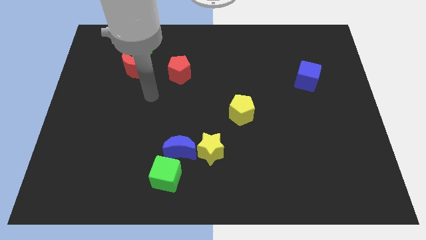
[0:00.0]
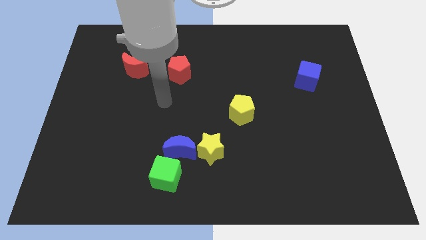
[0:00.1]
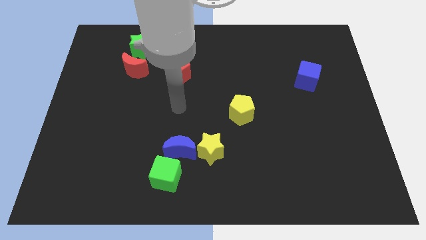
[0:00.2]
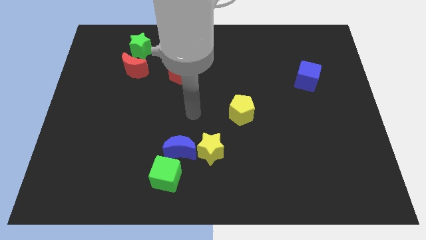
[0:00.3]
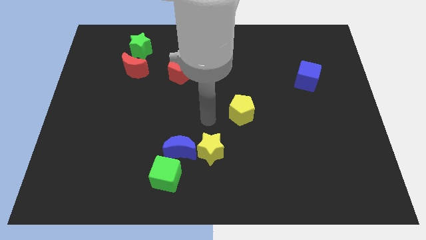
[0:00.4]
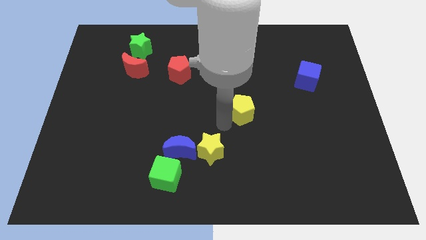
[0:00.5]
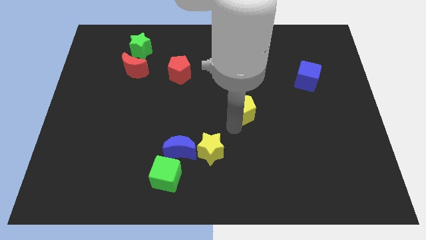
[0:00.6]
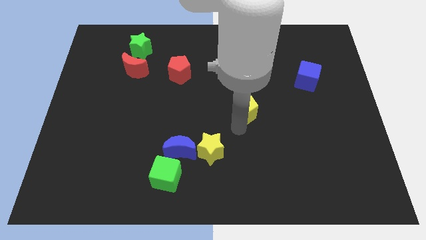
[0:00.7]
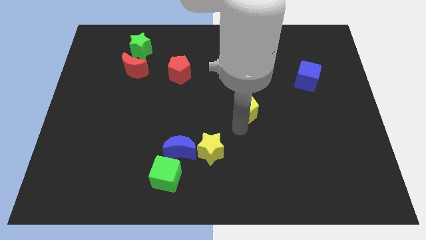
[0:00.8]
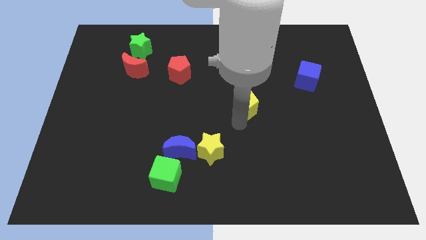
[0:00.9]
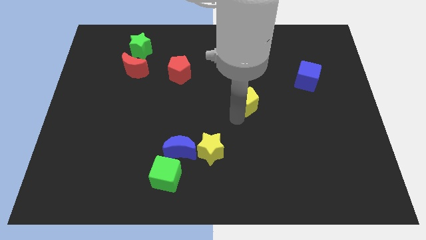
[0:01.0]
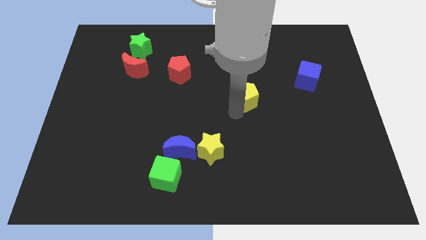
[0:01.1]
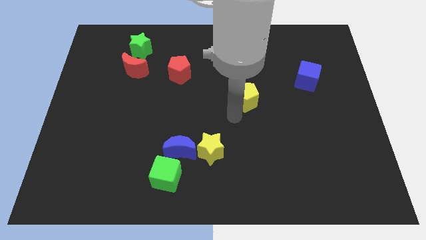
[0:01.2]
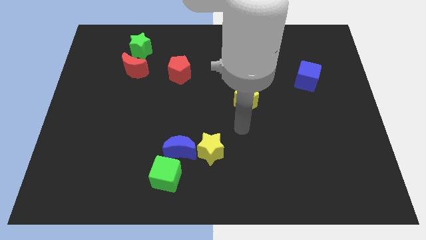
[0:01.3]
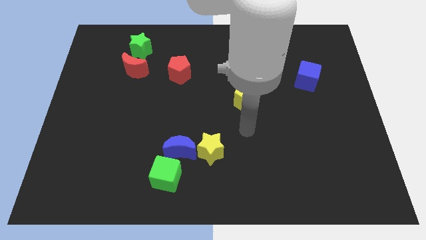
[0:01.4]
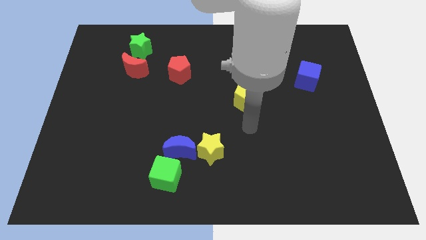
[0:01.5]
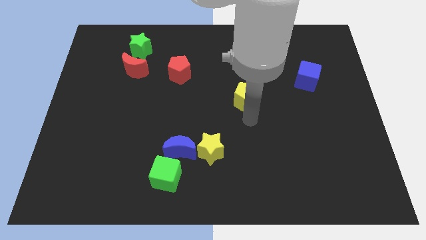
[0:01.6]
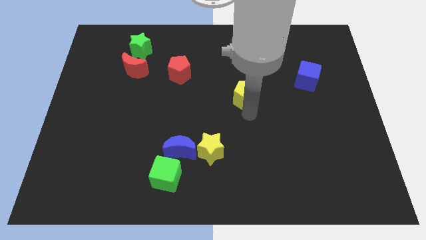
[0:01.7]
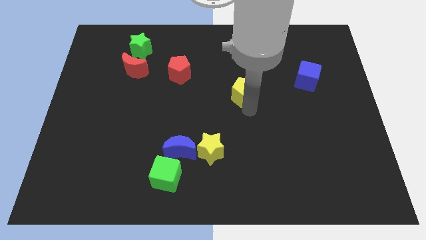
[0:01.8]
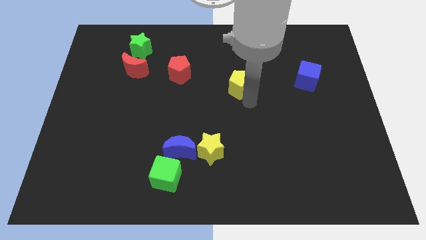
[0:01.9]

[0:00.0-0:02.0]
move the yellow pentagon to the bottom right of red pentagon

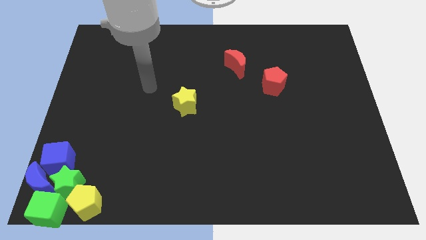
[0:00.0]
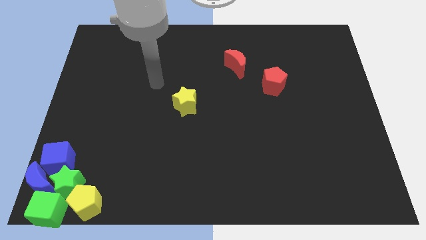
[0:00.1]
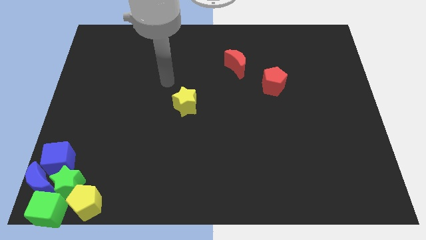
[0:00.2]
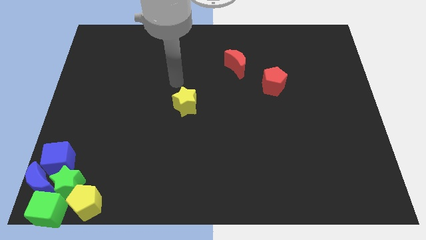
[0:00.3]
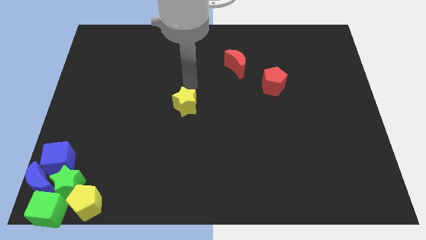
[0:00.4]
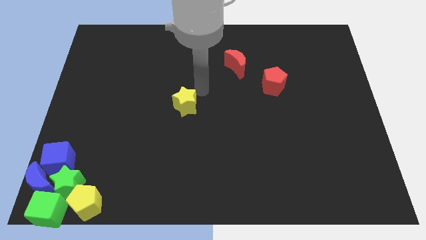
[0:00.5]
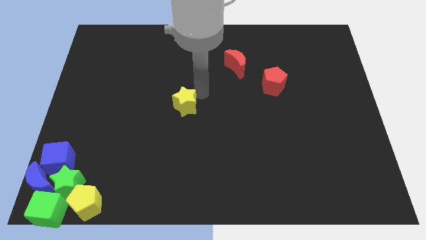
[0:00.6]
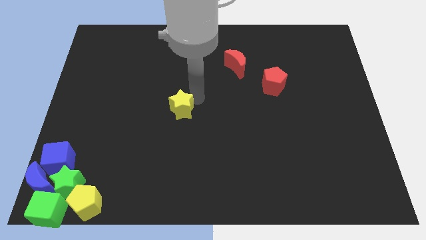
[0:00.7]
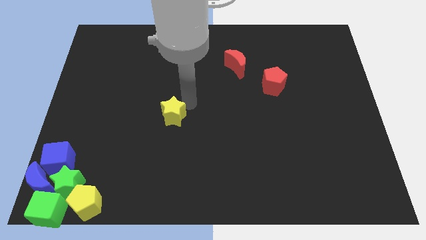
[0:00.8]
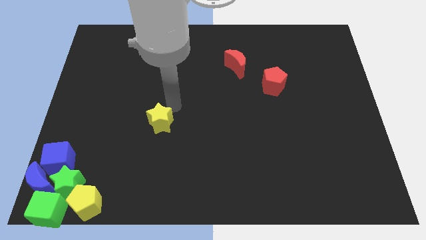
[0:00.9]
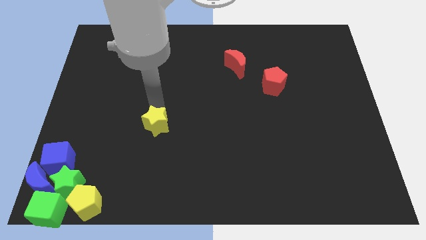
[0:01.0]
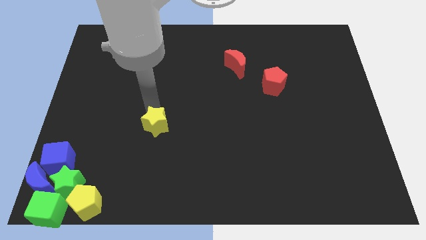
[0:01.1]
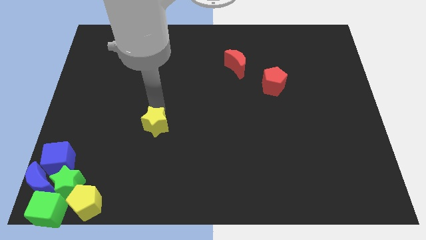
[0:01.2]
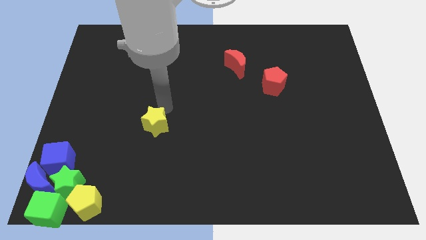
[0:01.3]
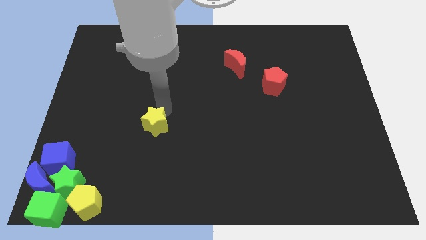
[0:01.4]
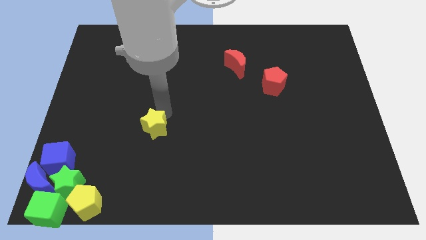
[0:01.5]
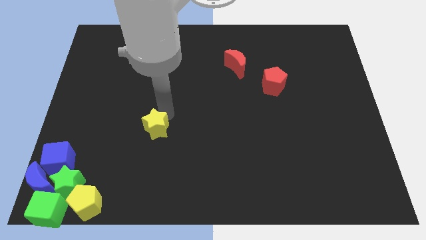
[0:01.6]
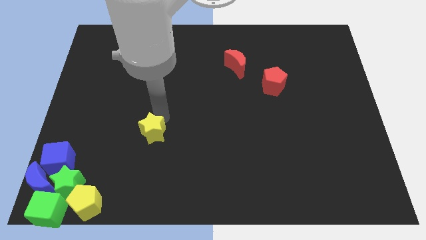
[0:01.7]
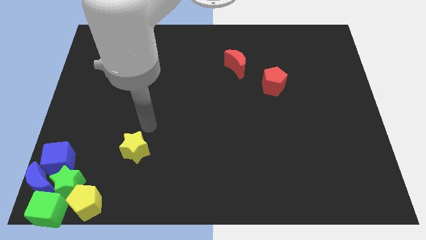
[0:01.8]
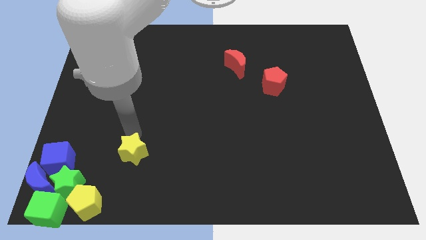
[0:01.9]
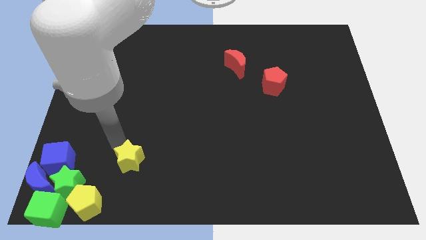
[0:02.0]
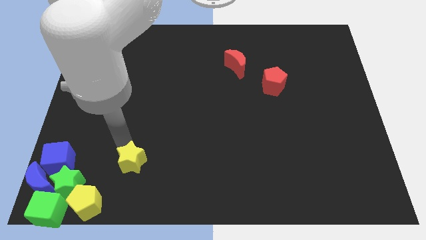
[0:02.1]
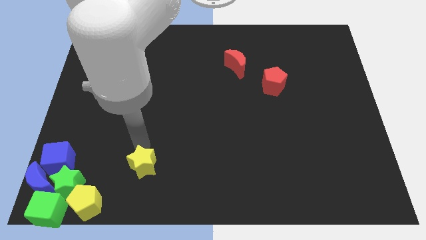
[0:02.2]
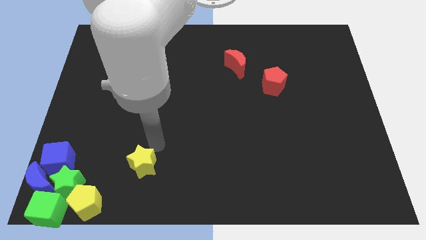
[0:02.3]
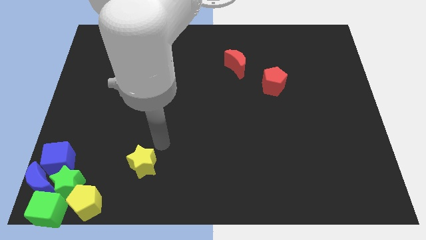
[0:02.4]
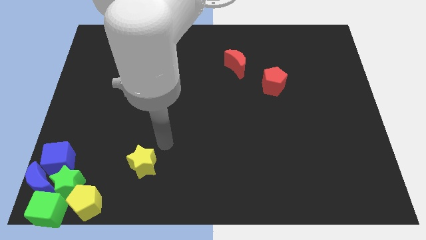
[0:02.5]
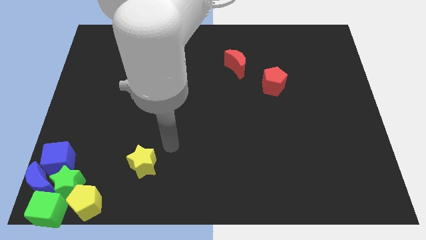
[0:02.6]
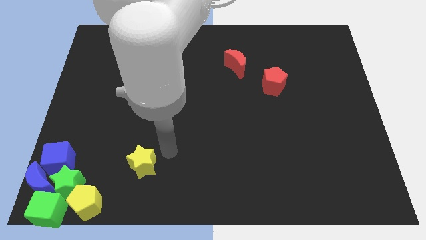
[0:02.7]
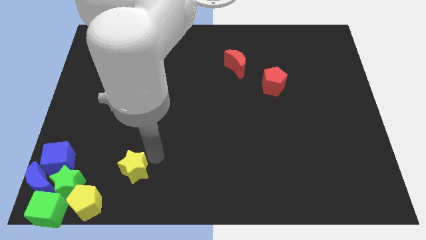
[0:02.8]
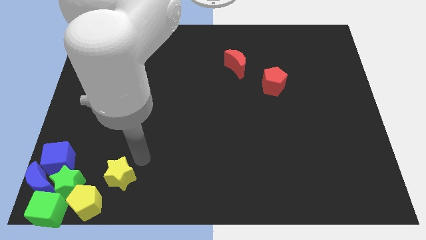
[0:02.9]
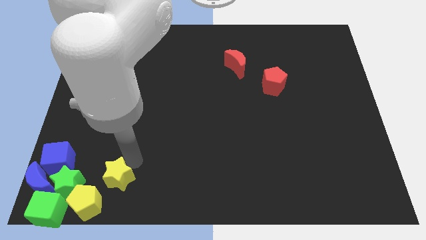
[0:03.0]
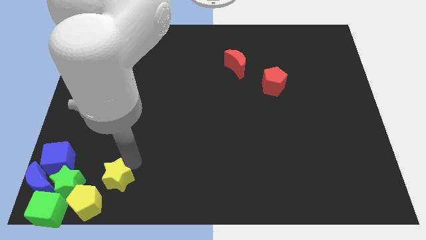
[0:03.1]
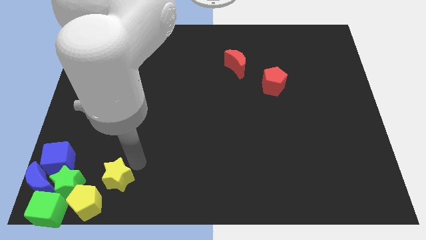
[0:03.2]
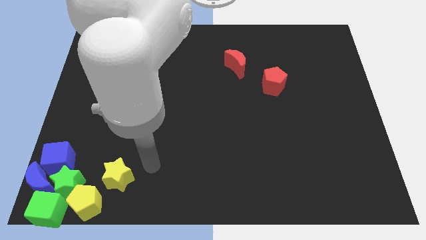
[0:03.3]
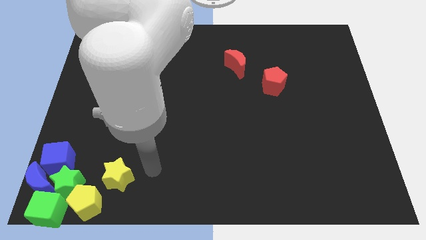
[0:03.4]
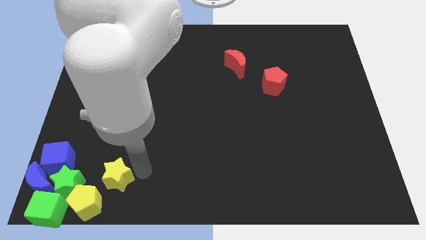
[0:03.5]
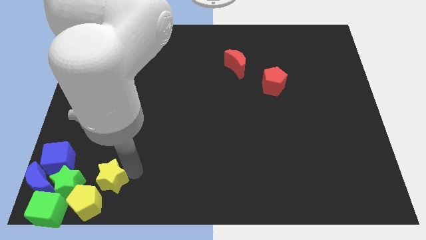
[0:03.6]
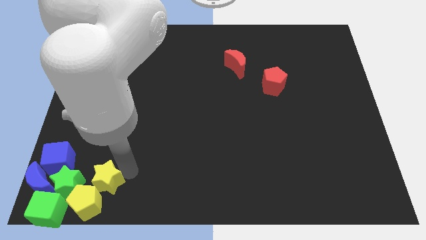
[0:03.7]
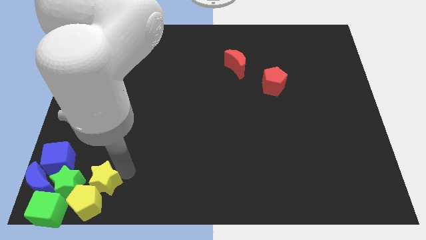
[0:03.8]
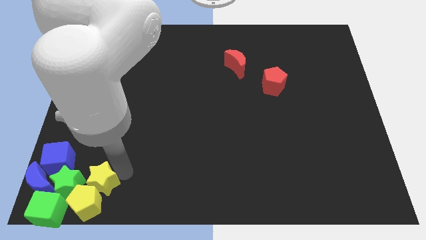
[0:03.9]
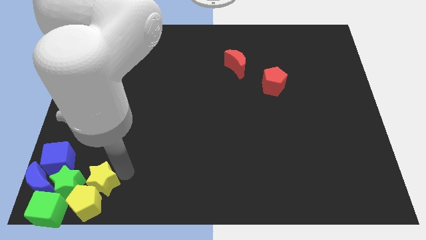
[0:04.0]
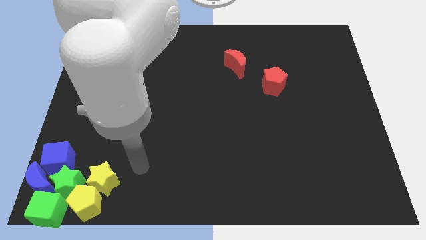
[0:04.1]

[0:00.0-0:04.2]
take the yellow star into the yellow pentagon

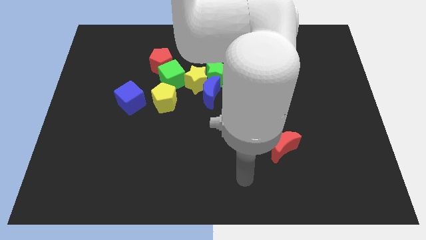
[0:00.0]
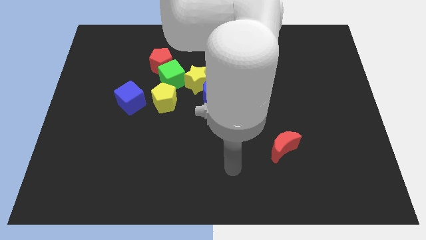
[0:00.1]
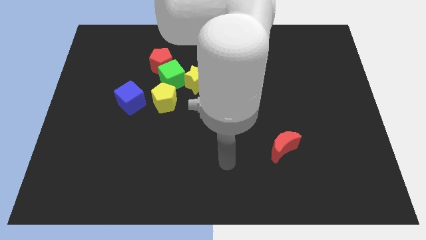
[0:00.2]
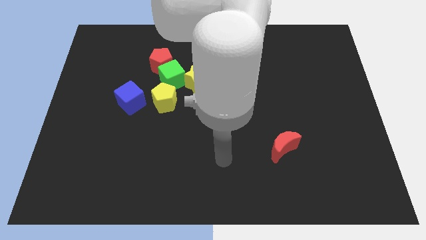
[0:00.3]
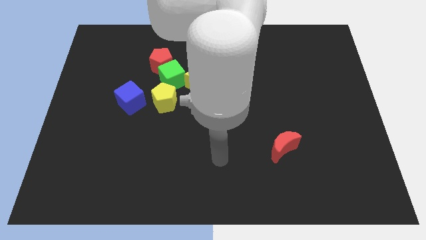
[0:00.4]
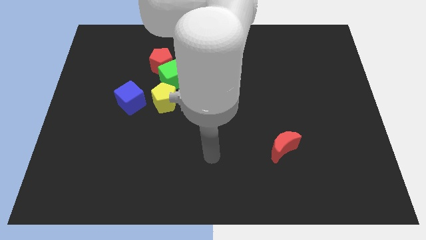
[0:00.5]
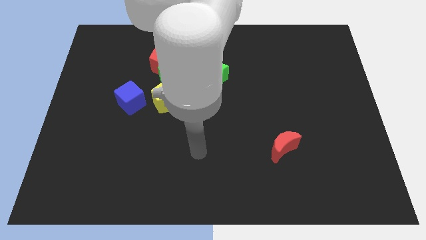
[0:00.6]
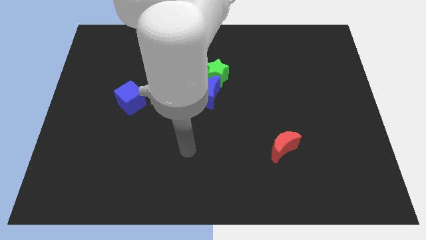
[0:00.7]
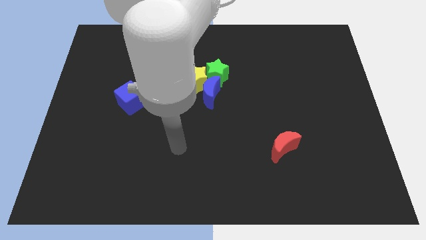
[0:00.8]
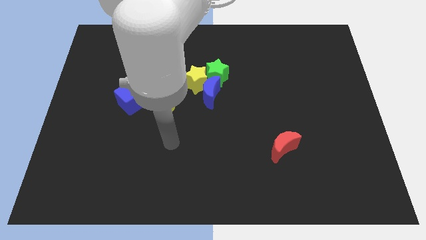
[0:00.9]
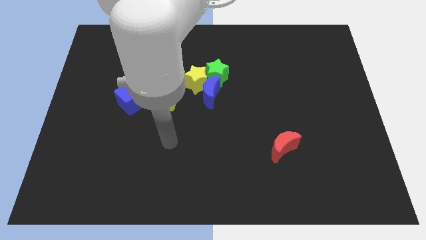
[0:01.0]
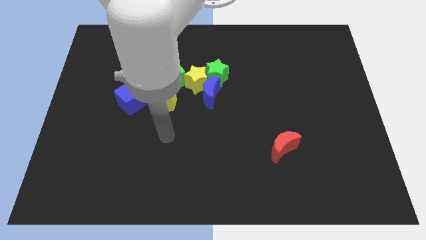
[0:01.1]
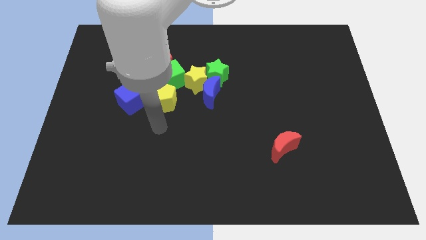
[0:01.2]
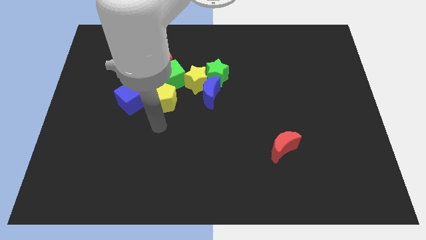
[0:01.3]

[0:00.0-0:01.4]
point your arm below the yellow pentagon

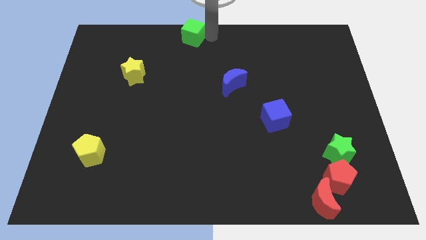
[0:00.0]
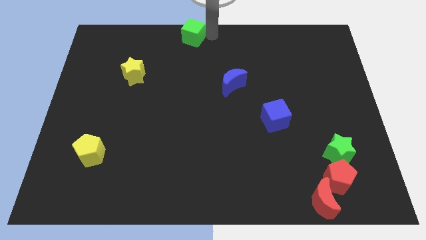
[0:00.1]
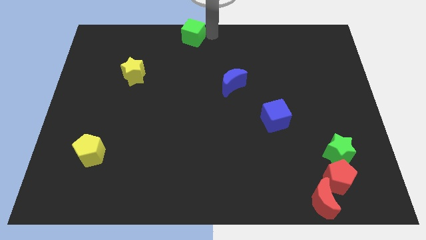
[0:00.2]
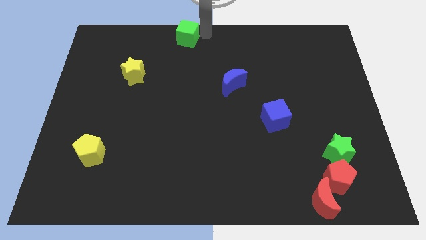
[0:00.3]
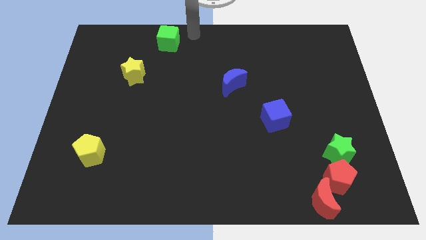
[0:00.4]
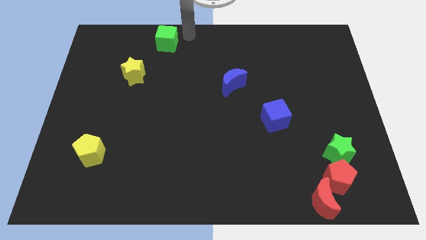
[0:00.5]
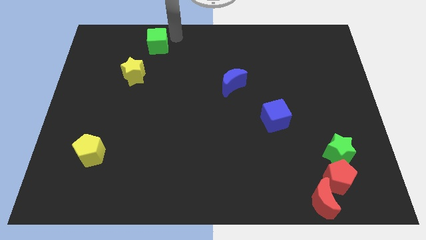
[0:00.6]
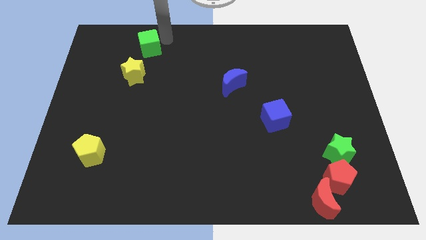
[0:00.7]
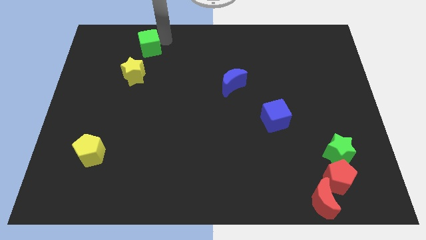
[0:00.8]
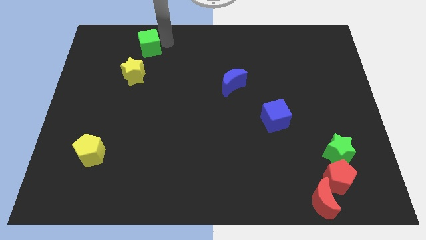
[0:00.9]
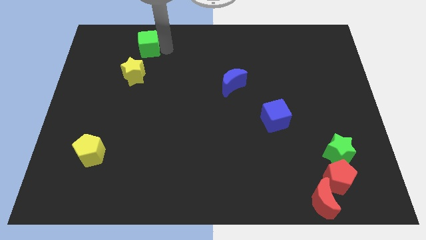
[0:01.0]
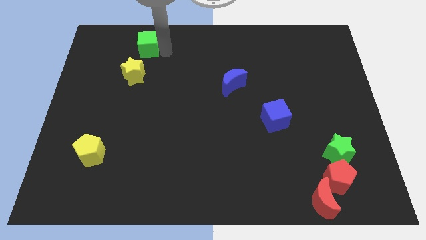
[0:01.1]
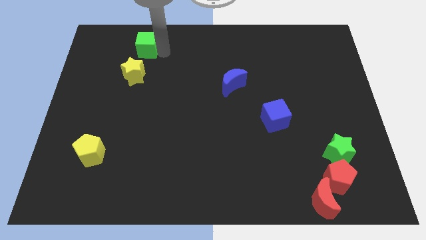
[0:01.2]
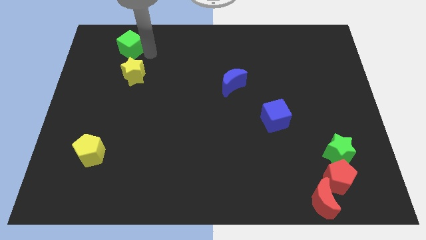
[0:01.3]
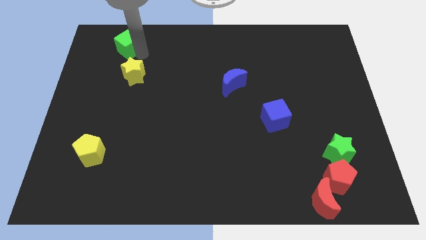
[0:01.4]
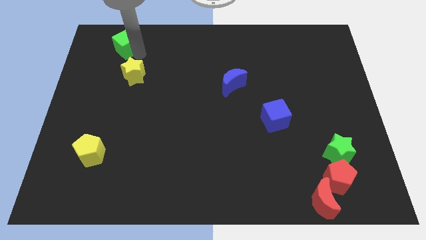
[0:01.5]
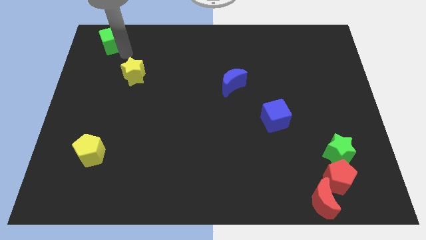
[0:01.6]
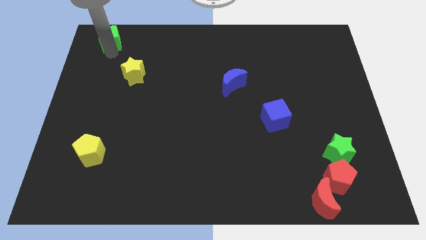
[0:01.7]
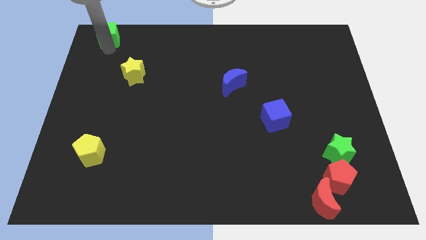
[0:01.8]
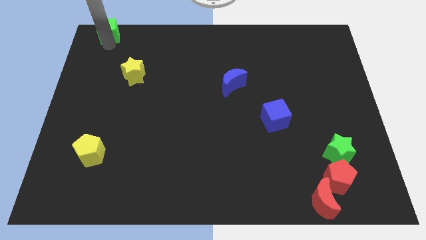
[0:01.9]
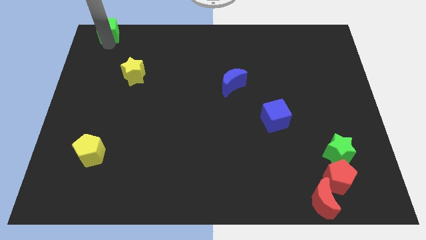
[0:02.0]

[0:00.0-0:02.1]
push the green cube to the top left side of the board
